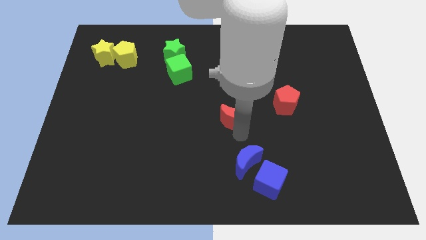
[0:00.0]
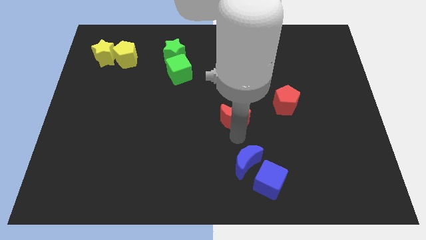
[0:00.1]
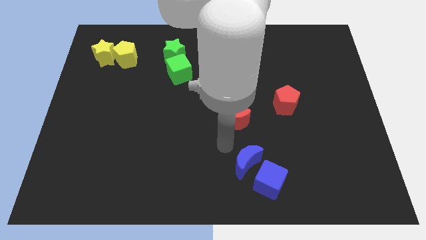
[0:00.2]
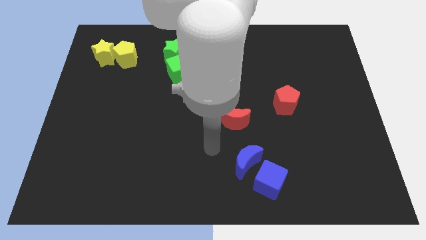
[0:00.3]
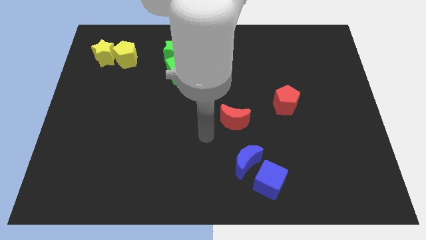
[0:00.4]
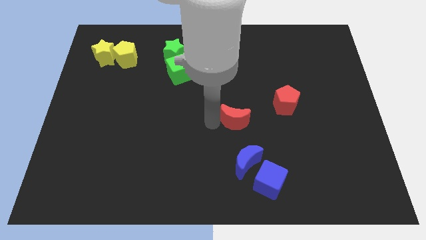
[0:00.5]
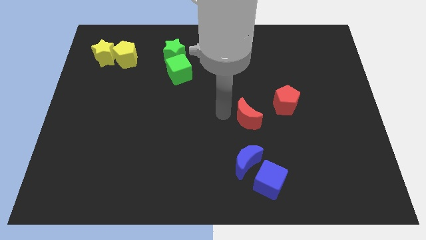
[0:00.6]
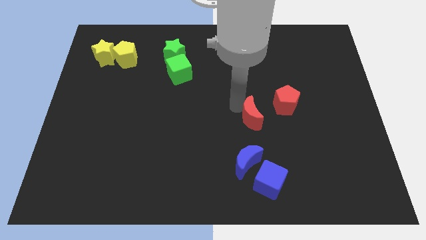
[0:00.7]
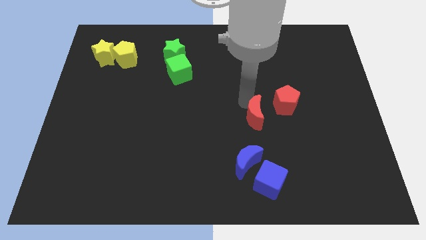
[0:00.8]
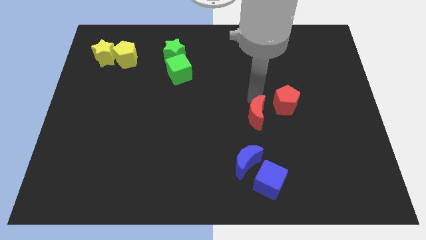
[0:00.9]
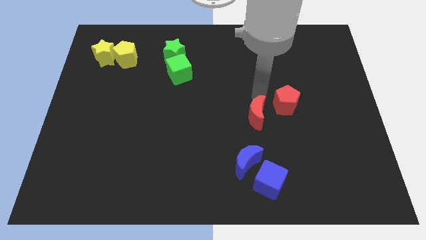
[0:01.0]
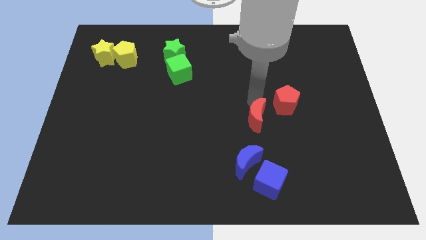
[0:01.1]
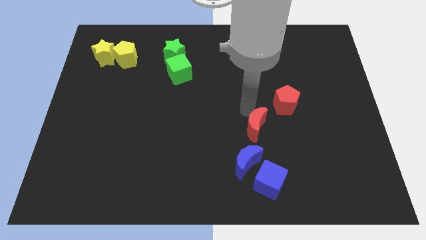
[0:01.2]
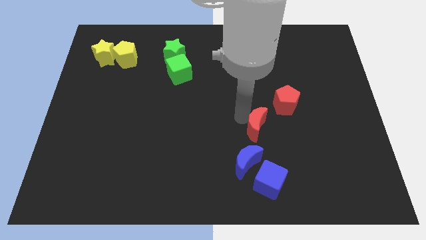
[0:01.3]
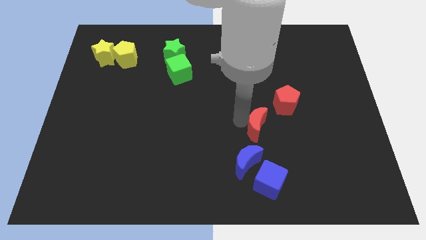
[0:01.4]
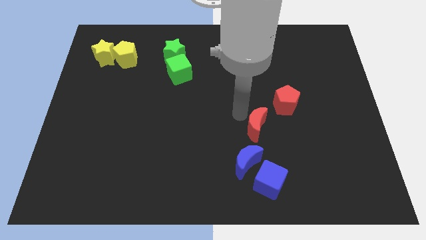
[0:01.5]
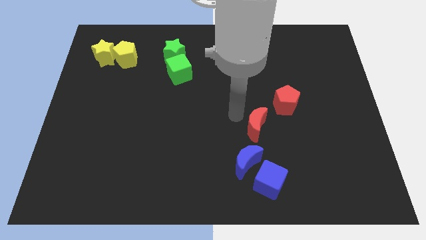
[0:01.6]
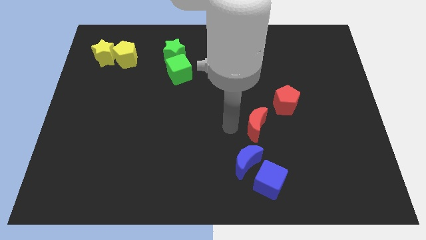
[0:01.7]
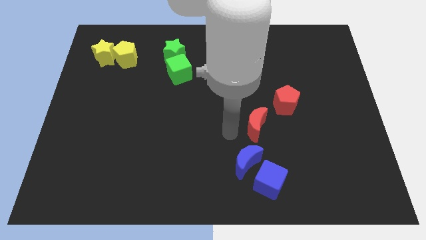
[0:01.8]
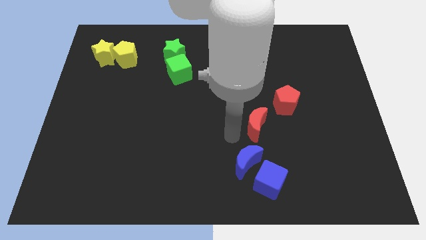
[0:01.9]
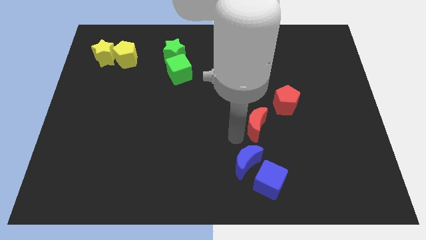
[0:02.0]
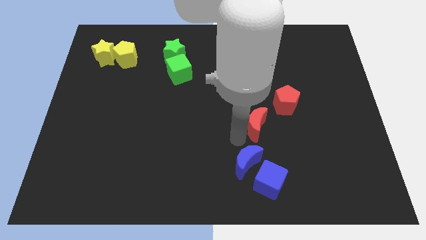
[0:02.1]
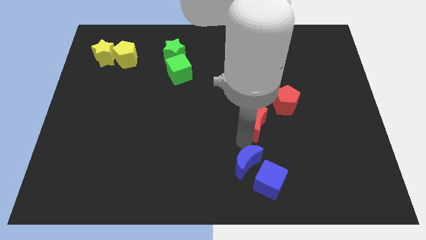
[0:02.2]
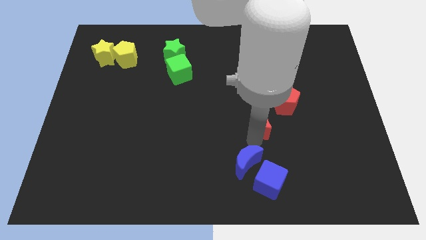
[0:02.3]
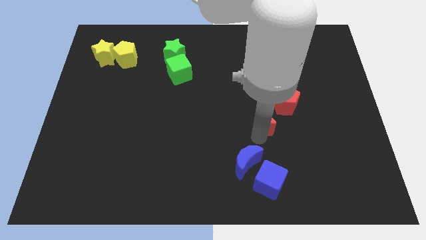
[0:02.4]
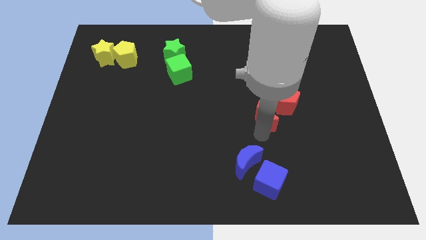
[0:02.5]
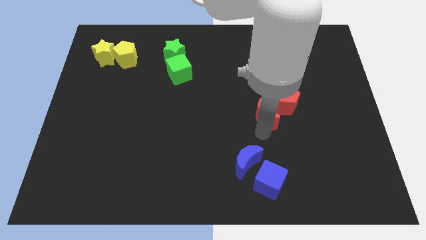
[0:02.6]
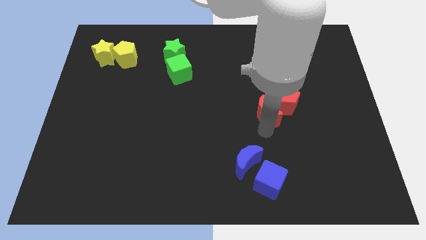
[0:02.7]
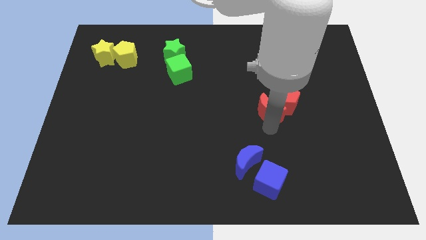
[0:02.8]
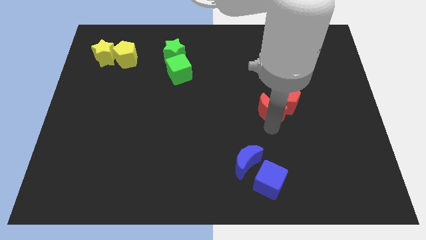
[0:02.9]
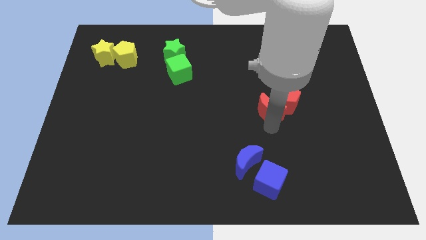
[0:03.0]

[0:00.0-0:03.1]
move the red crescent close to the red pentagon

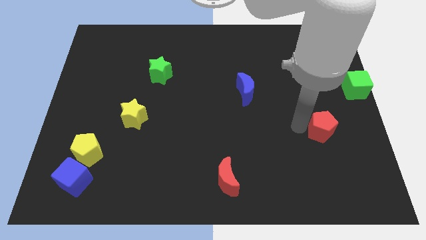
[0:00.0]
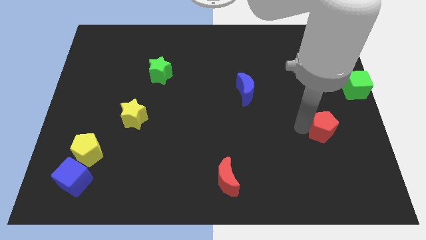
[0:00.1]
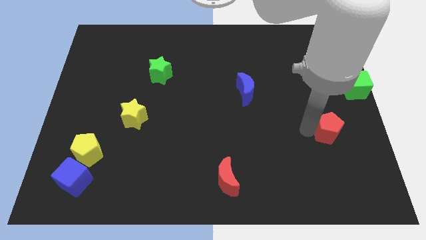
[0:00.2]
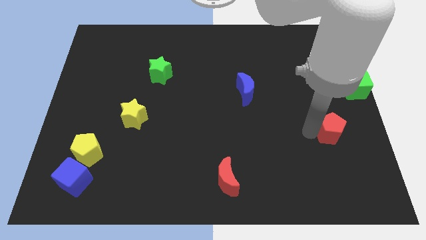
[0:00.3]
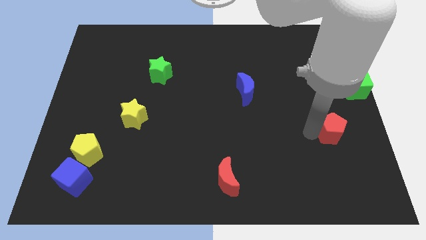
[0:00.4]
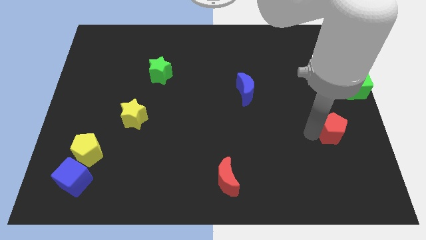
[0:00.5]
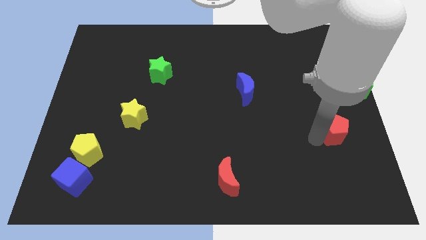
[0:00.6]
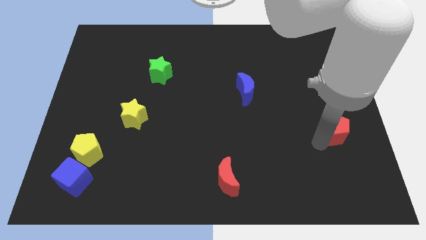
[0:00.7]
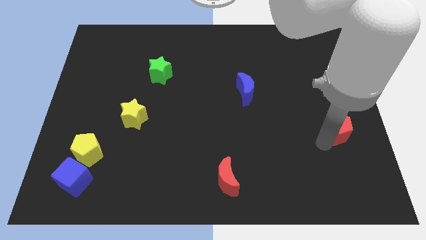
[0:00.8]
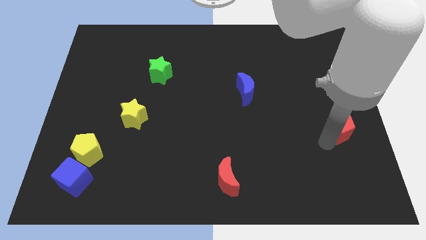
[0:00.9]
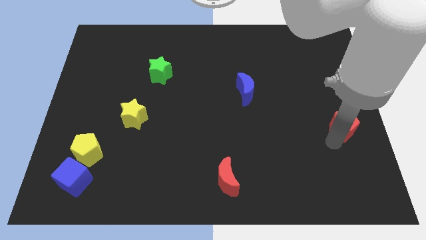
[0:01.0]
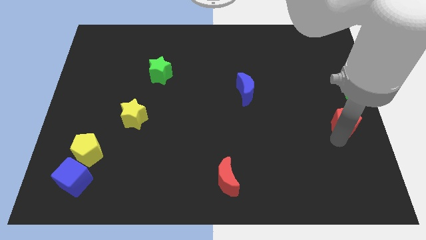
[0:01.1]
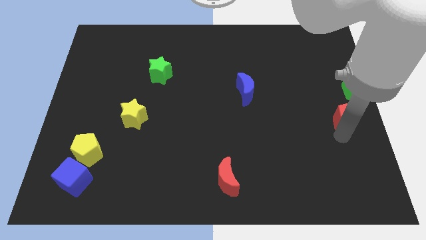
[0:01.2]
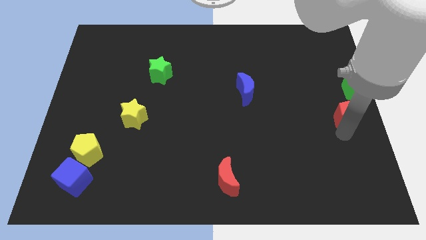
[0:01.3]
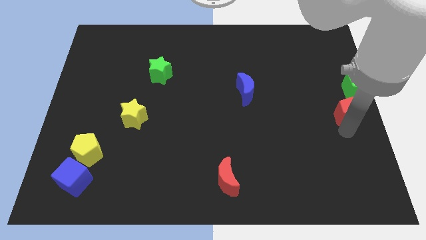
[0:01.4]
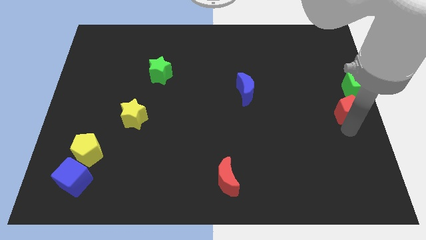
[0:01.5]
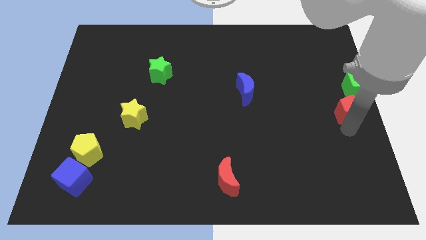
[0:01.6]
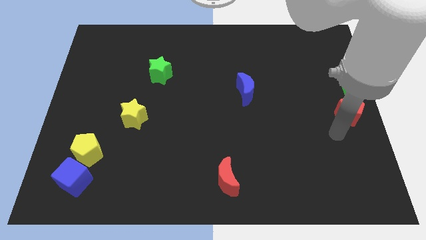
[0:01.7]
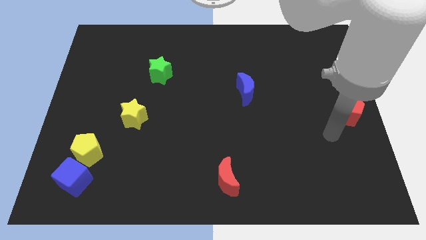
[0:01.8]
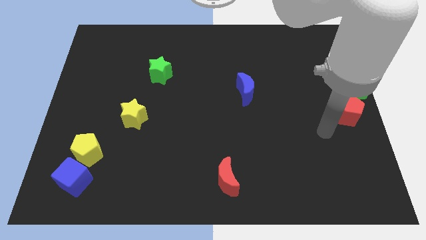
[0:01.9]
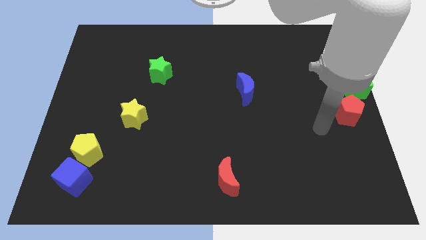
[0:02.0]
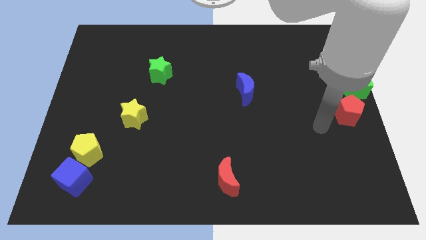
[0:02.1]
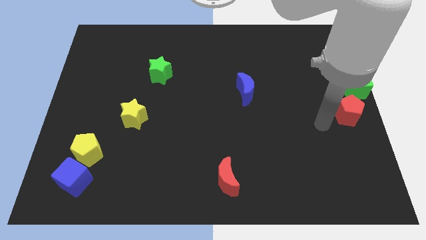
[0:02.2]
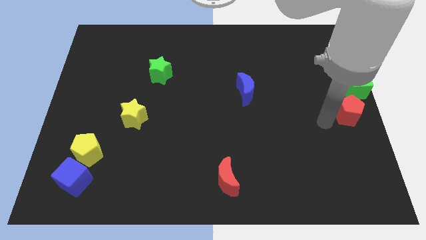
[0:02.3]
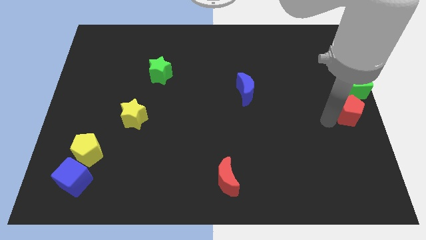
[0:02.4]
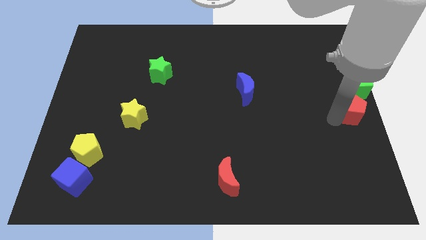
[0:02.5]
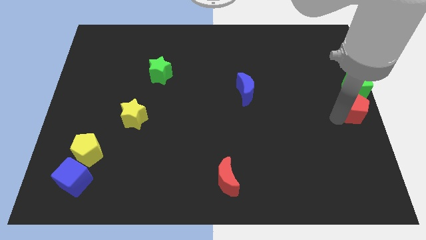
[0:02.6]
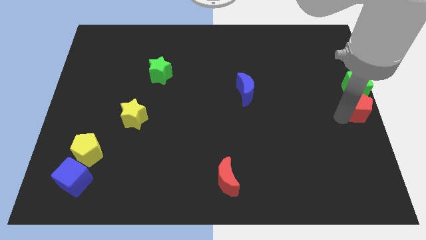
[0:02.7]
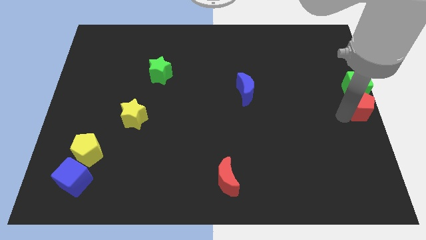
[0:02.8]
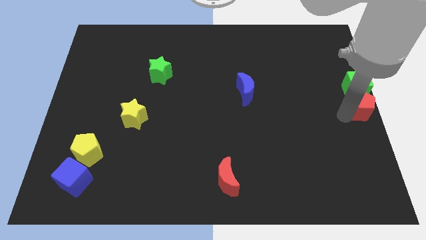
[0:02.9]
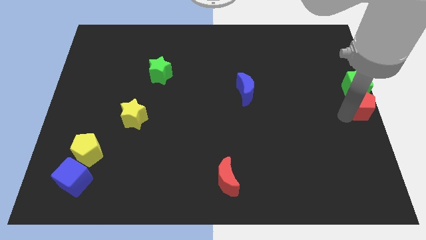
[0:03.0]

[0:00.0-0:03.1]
place the red pentagon below the green cube

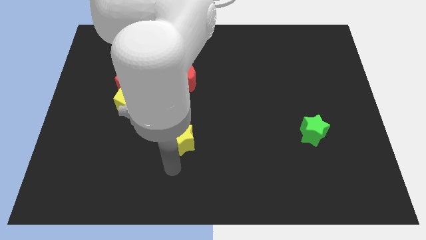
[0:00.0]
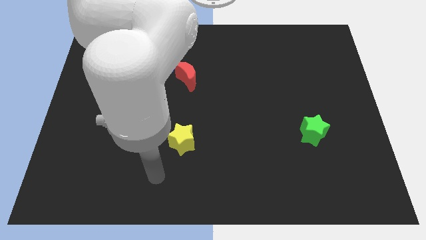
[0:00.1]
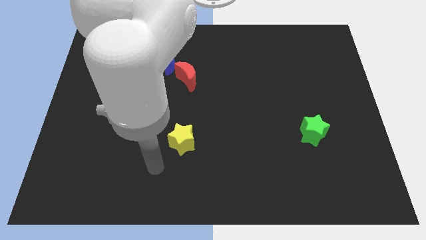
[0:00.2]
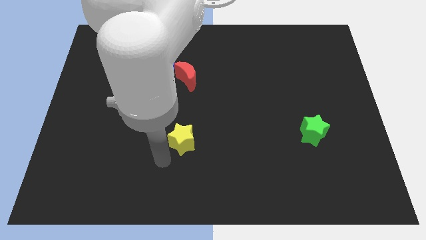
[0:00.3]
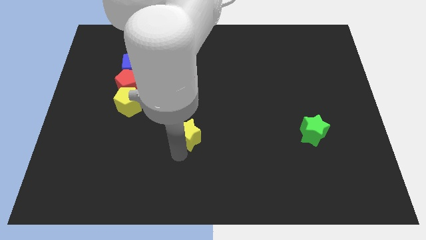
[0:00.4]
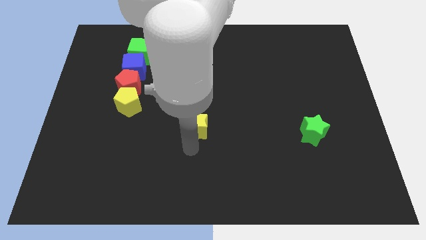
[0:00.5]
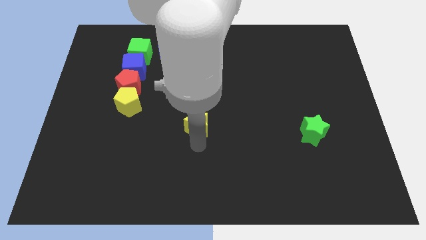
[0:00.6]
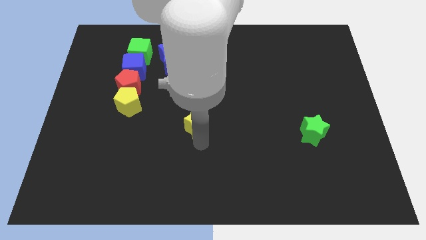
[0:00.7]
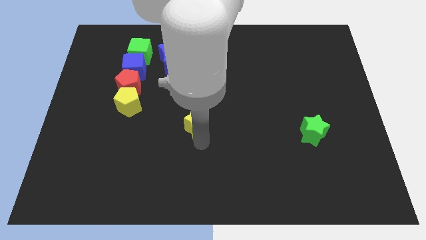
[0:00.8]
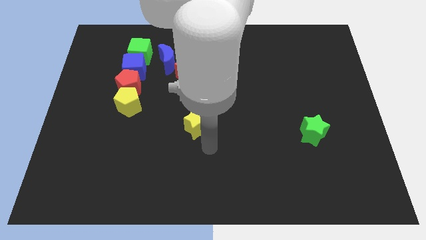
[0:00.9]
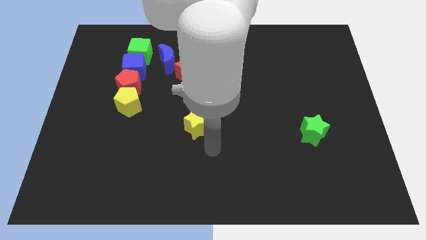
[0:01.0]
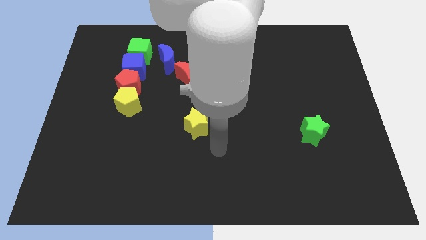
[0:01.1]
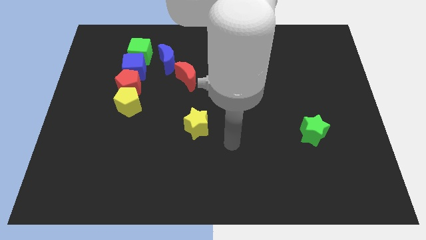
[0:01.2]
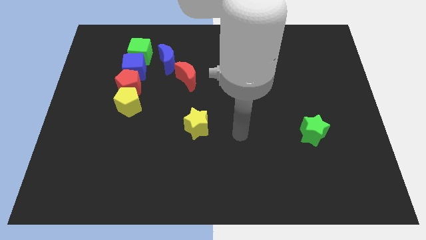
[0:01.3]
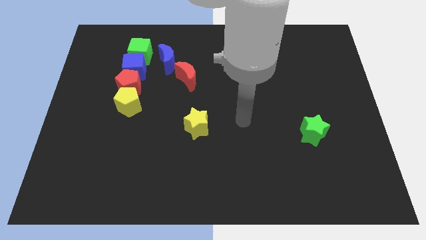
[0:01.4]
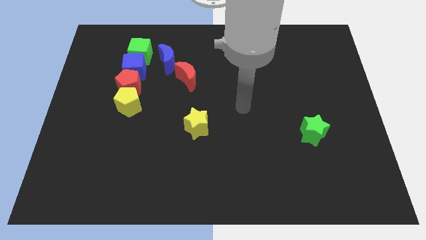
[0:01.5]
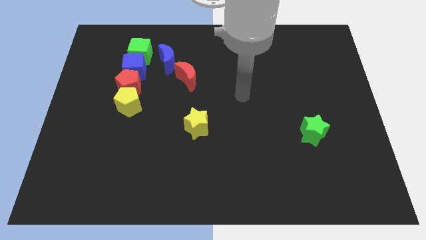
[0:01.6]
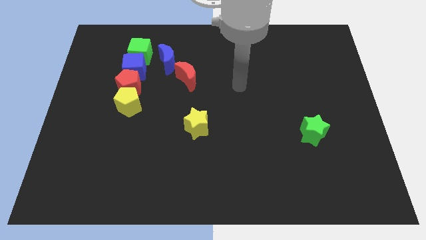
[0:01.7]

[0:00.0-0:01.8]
push the yellow star towards red moon

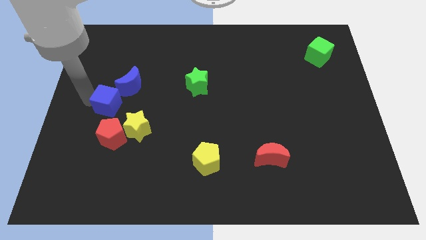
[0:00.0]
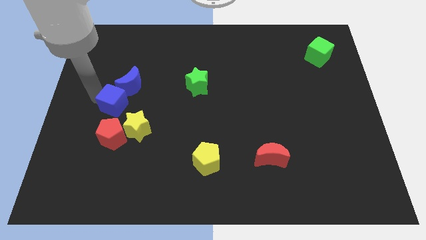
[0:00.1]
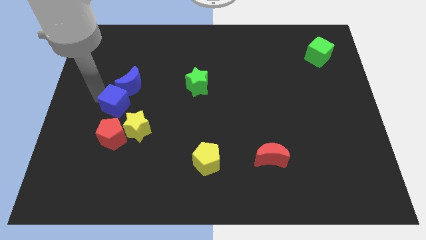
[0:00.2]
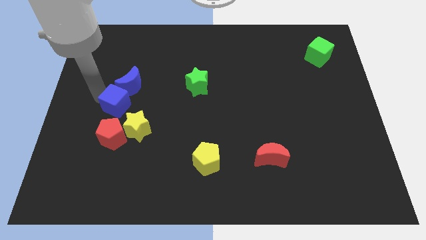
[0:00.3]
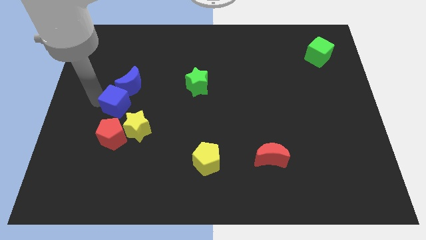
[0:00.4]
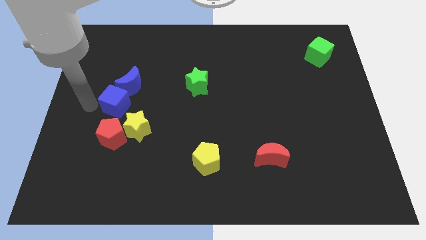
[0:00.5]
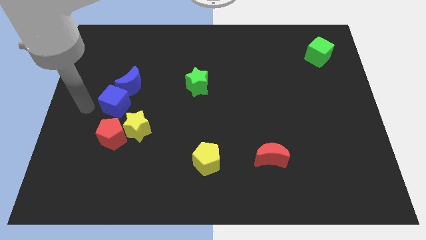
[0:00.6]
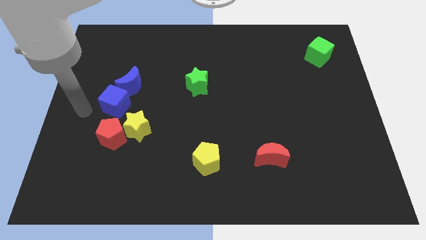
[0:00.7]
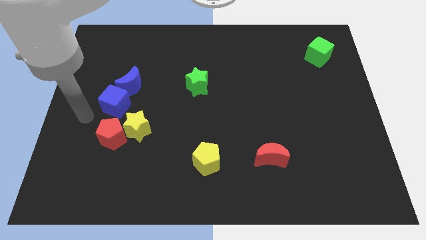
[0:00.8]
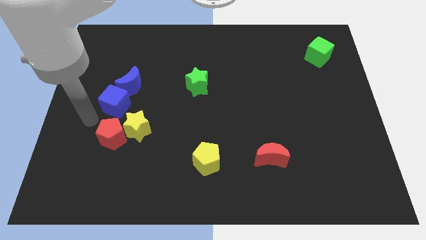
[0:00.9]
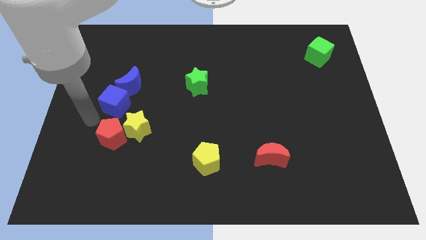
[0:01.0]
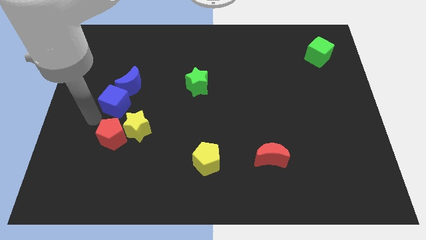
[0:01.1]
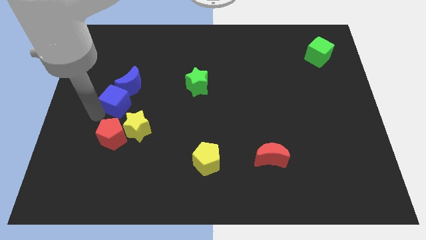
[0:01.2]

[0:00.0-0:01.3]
attach the blue cube to the blue moon
